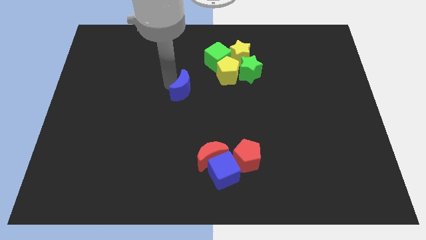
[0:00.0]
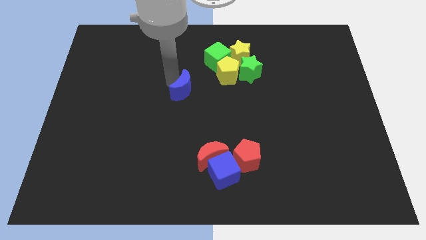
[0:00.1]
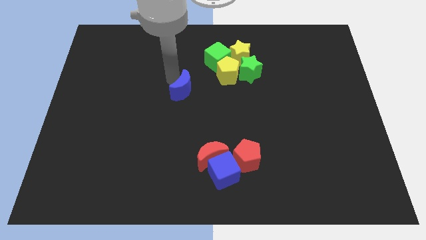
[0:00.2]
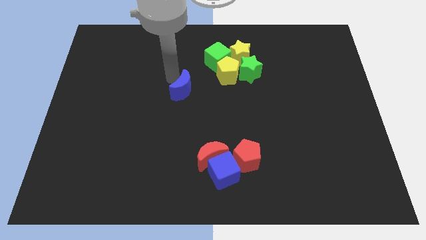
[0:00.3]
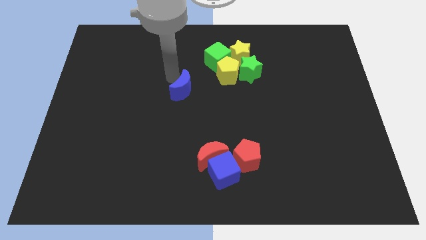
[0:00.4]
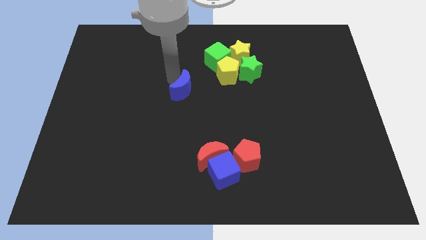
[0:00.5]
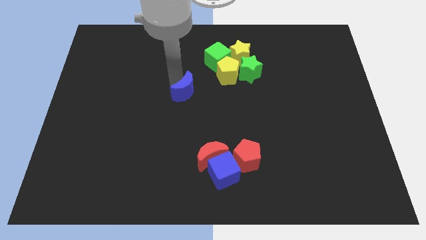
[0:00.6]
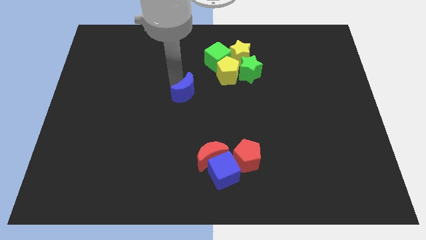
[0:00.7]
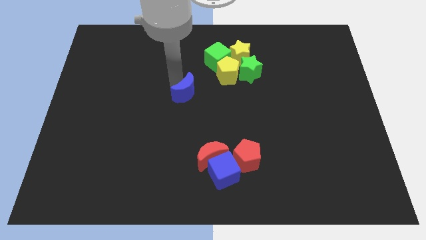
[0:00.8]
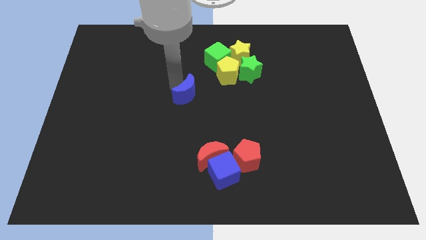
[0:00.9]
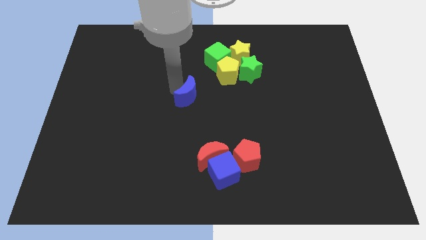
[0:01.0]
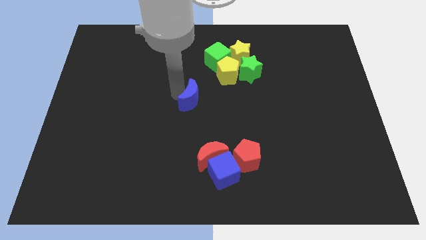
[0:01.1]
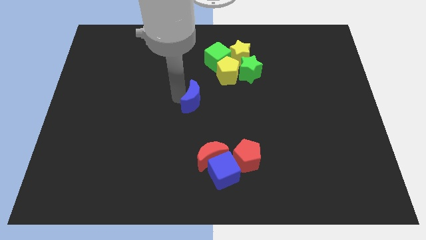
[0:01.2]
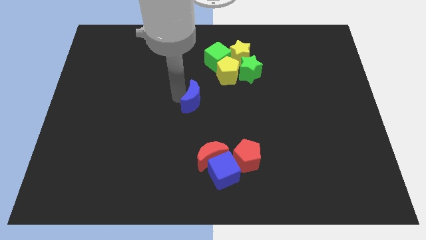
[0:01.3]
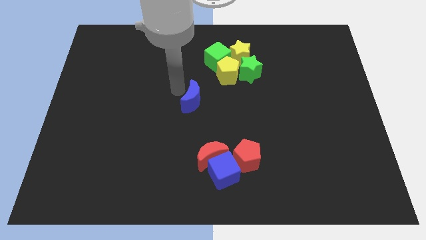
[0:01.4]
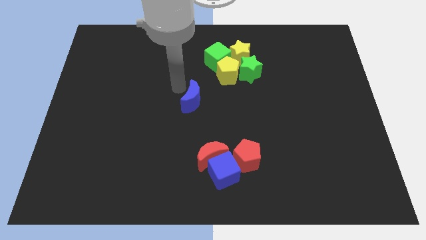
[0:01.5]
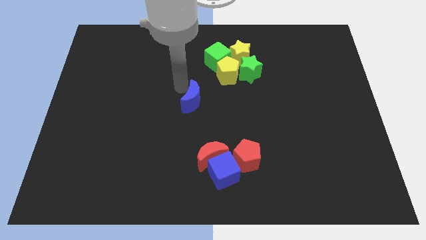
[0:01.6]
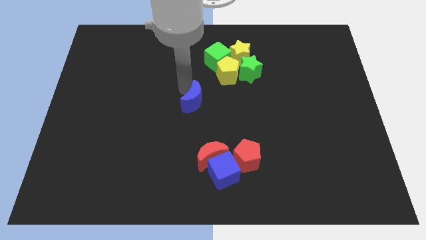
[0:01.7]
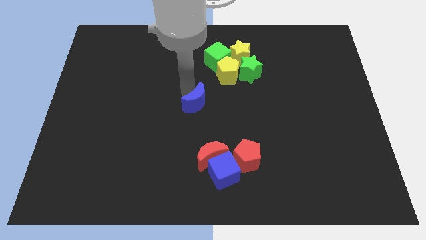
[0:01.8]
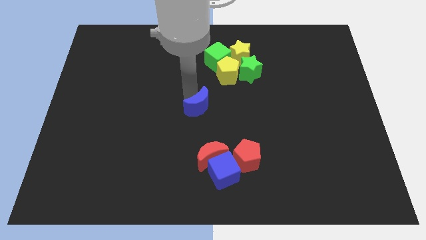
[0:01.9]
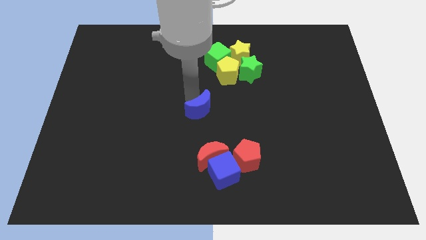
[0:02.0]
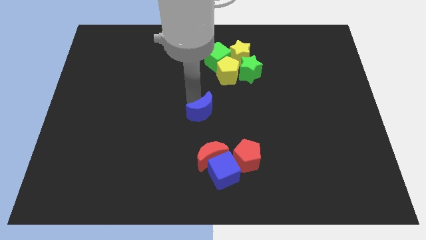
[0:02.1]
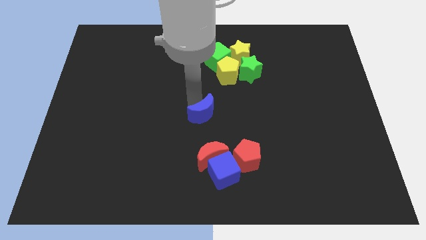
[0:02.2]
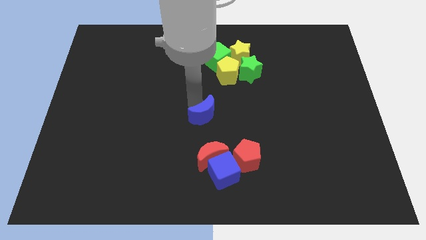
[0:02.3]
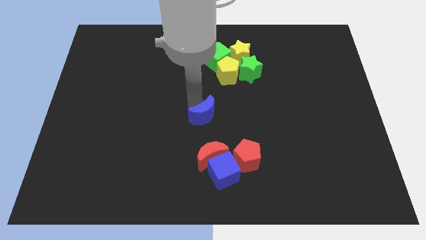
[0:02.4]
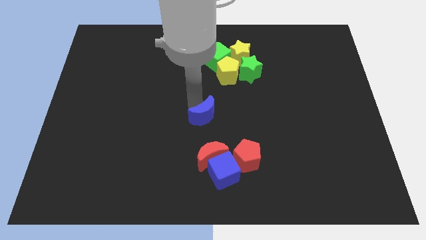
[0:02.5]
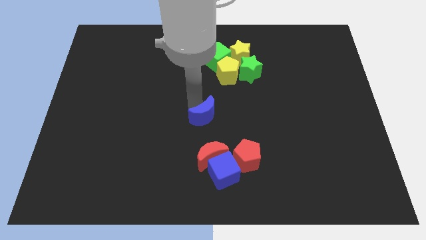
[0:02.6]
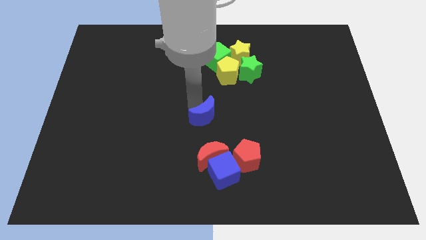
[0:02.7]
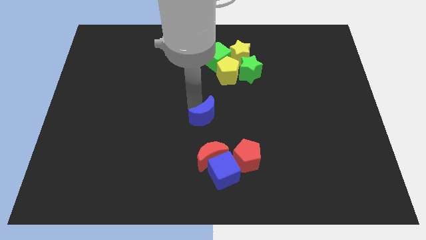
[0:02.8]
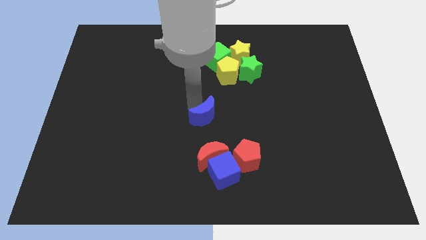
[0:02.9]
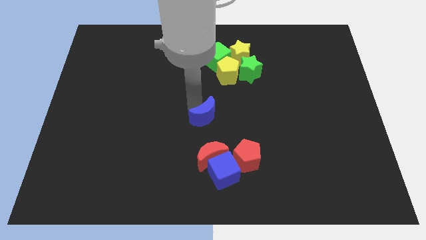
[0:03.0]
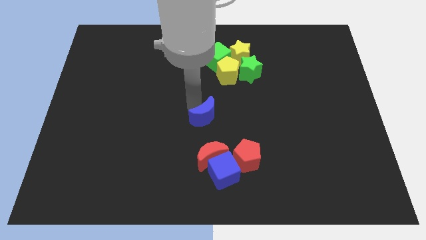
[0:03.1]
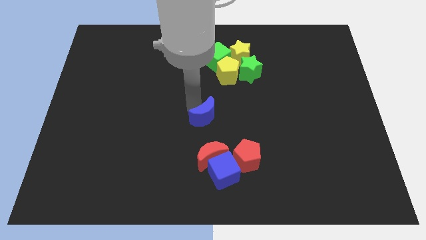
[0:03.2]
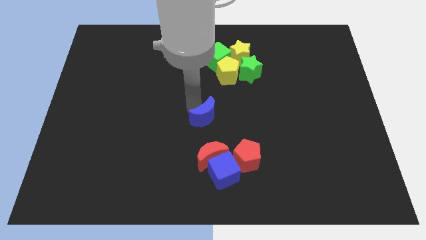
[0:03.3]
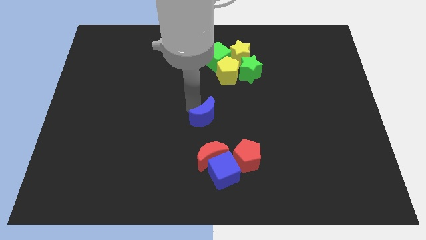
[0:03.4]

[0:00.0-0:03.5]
push the blue crescent to the center of the board

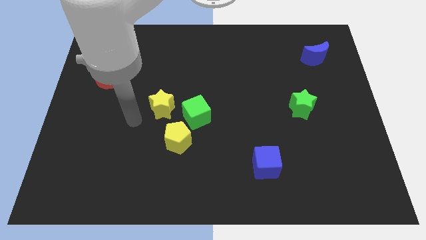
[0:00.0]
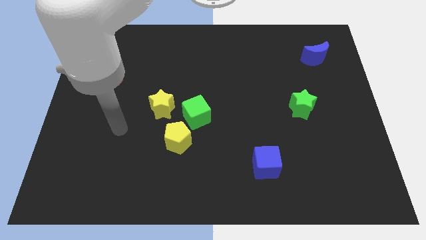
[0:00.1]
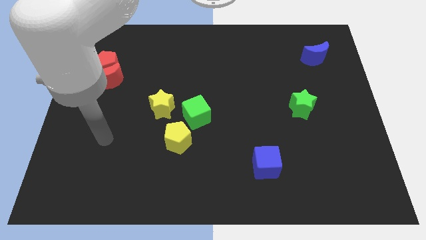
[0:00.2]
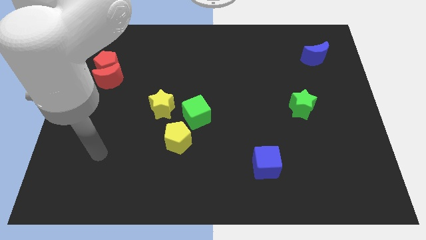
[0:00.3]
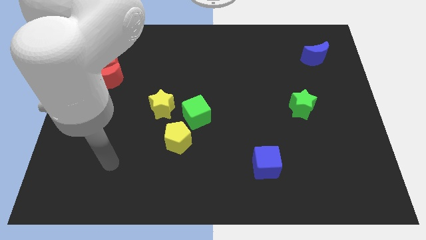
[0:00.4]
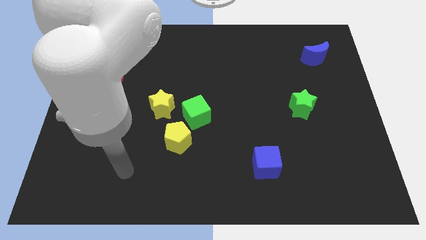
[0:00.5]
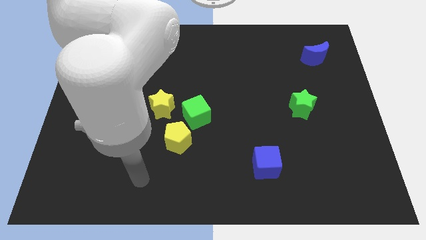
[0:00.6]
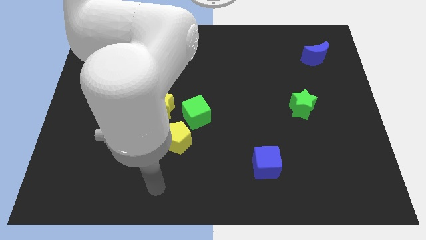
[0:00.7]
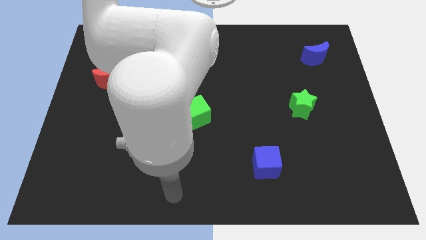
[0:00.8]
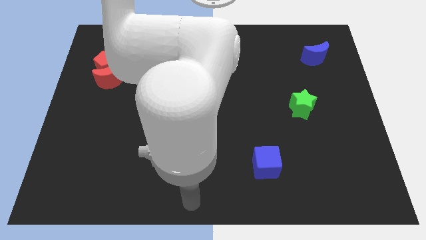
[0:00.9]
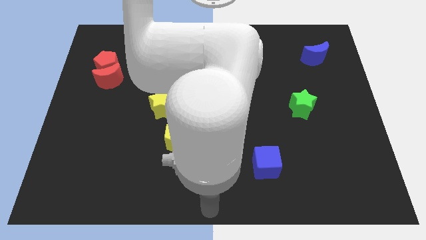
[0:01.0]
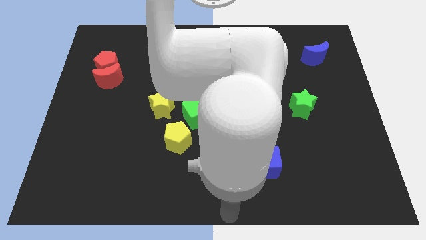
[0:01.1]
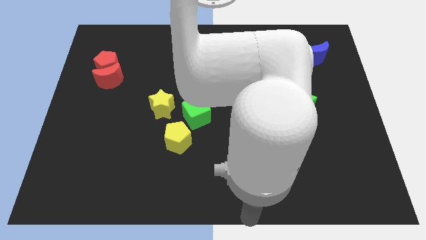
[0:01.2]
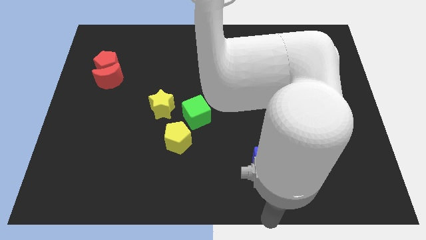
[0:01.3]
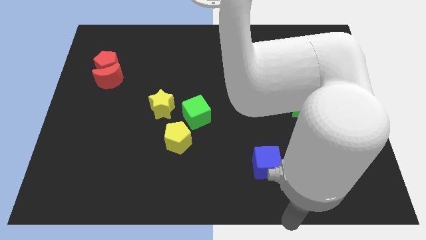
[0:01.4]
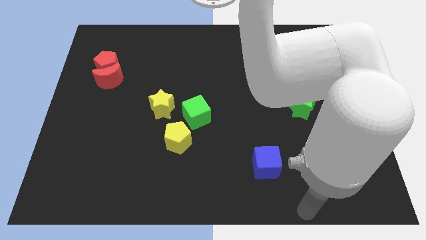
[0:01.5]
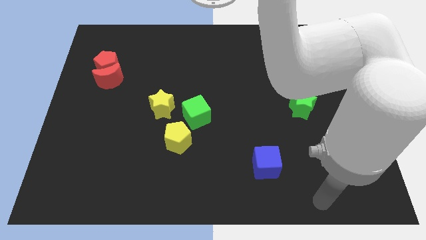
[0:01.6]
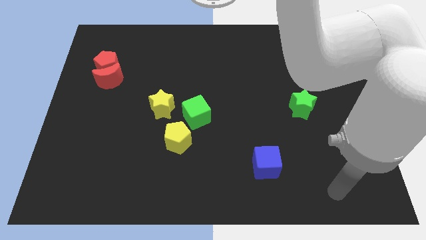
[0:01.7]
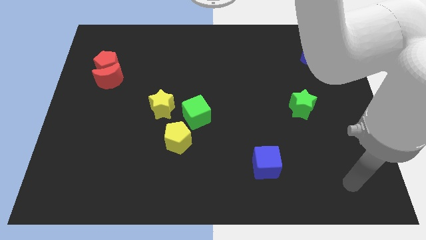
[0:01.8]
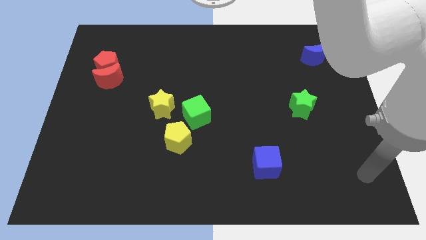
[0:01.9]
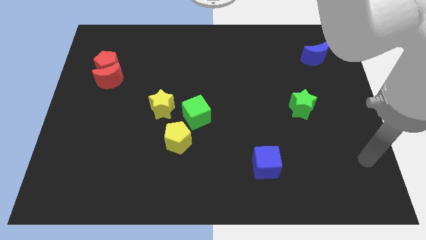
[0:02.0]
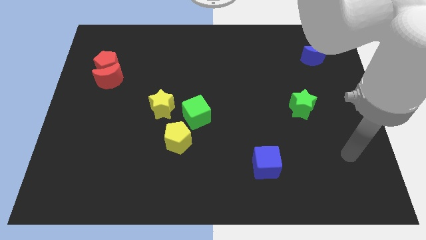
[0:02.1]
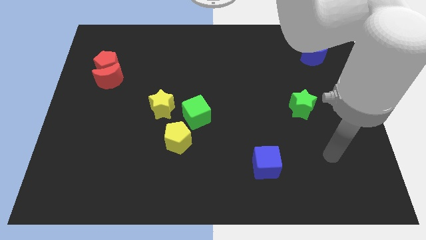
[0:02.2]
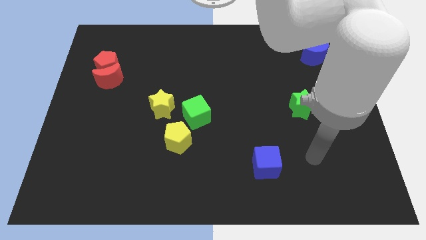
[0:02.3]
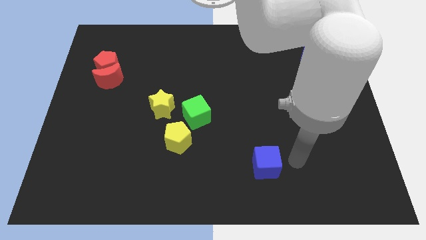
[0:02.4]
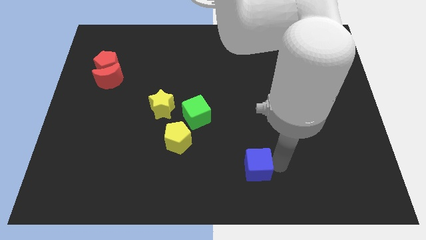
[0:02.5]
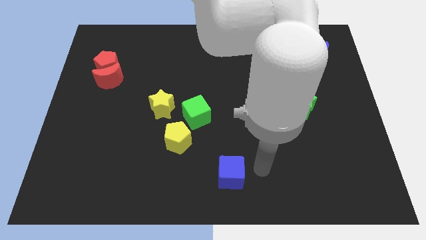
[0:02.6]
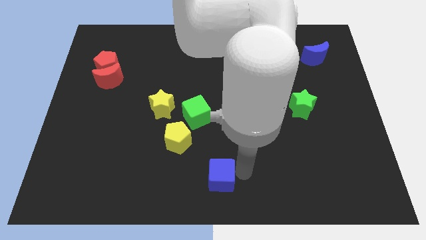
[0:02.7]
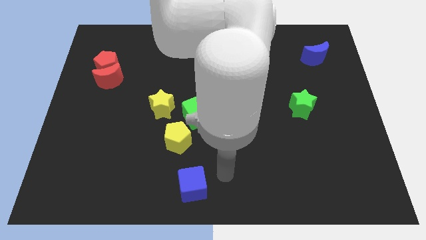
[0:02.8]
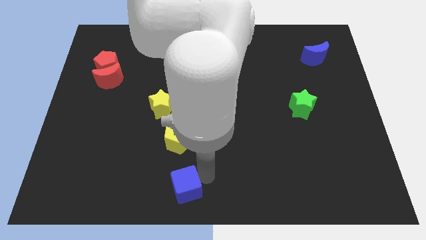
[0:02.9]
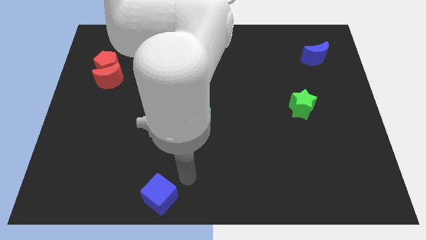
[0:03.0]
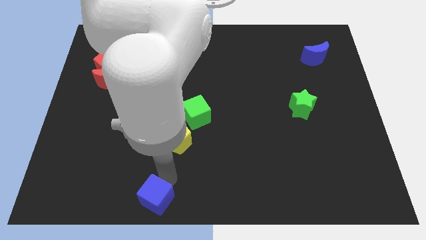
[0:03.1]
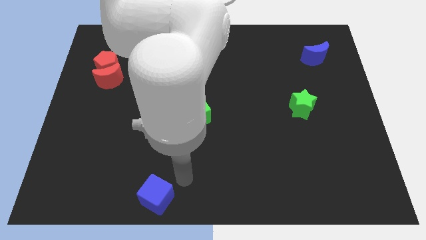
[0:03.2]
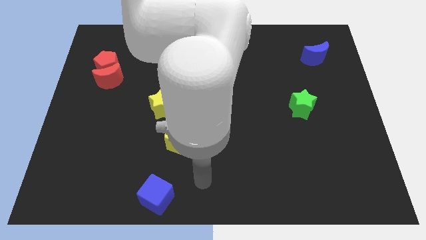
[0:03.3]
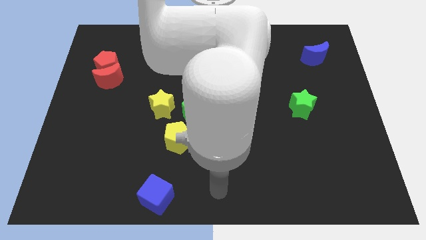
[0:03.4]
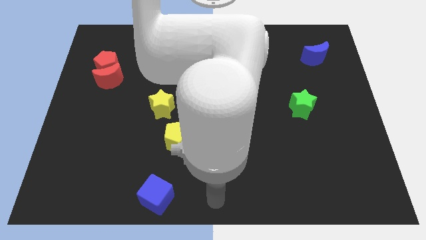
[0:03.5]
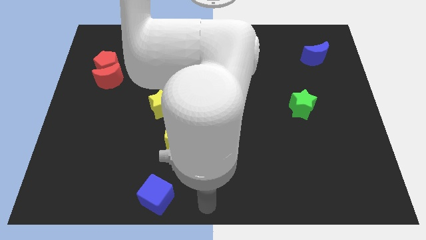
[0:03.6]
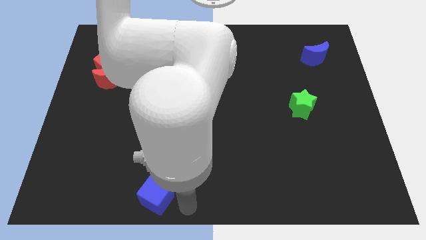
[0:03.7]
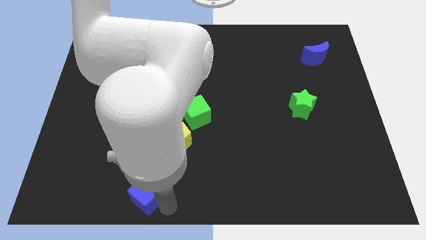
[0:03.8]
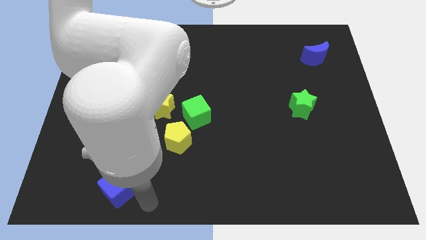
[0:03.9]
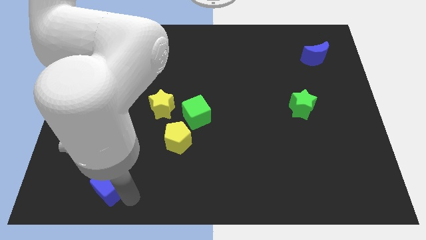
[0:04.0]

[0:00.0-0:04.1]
move the blue cube to the bottom left side of the table

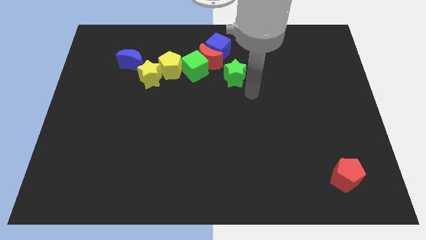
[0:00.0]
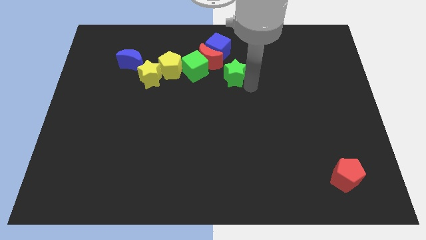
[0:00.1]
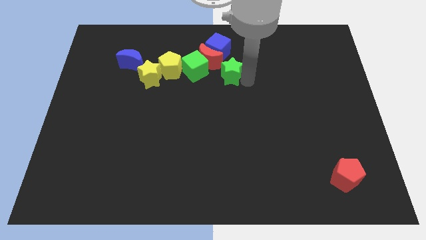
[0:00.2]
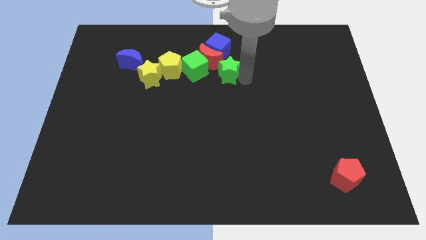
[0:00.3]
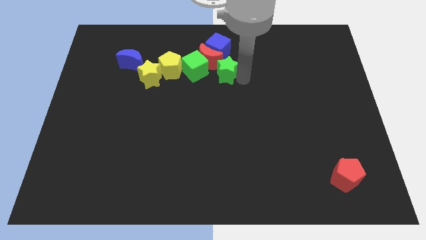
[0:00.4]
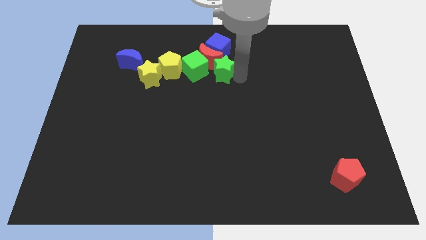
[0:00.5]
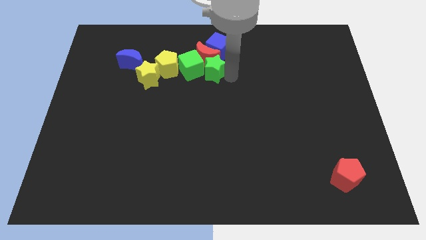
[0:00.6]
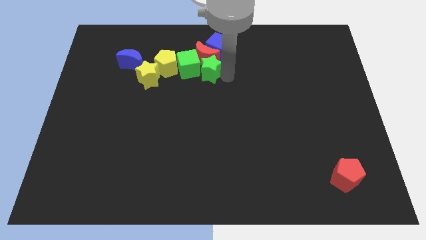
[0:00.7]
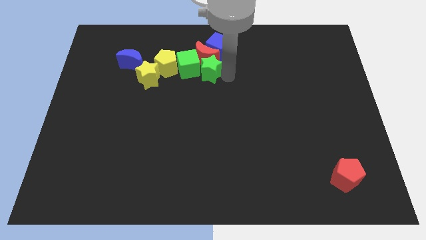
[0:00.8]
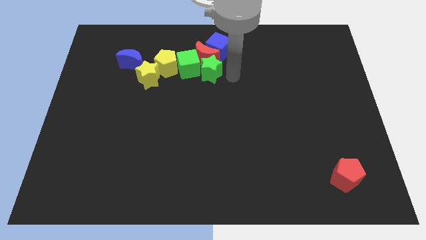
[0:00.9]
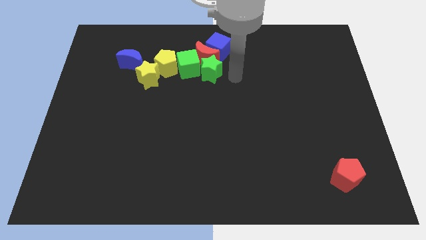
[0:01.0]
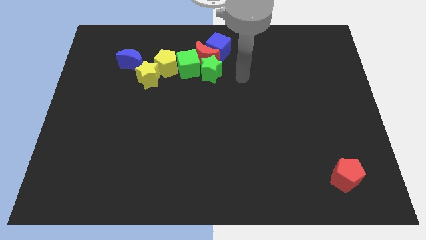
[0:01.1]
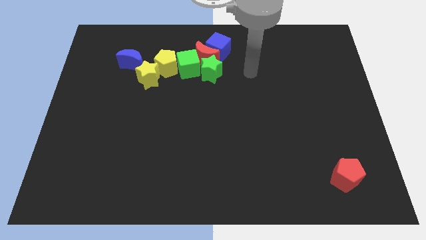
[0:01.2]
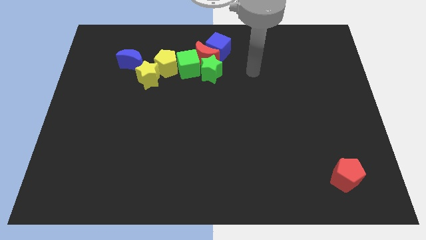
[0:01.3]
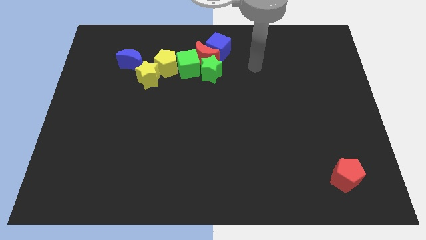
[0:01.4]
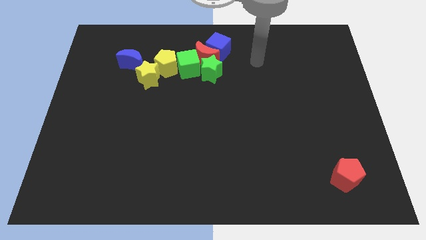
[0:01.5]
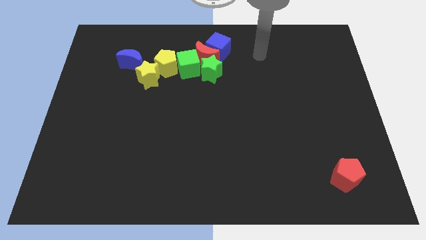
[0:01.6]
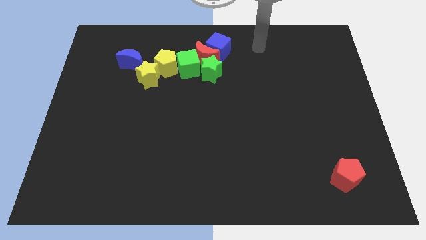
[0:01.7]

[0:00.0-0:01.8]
push the green star into the green cube
